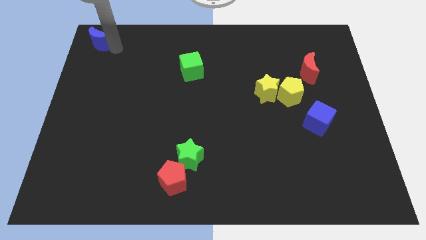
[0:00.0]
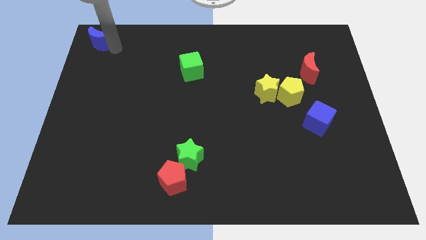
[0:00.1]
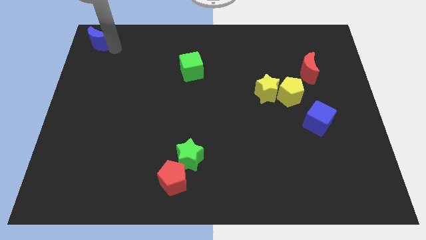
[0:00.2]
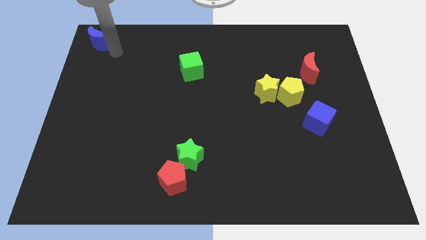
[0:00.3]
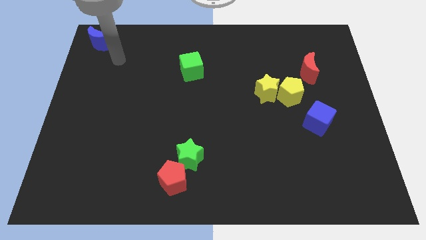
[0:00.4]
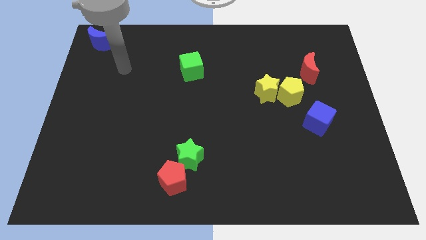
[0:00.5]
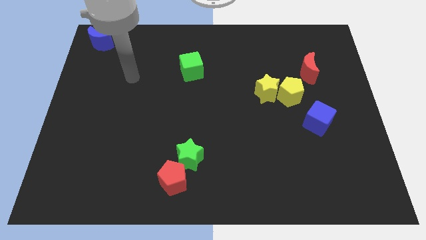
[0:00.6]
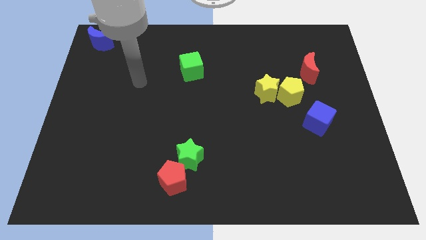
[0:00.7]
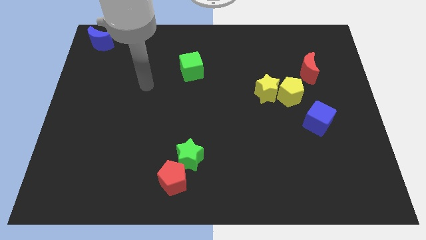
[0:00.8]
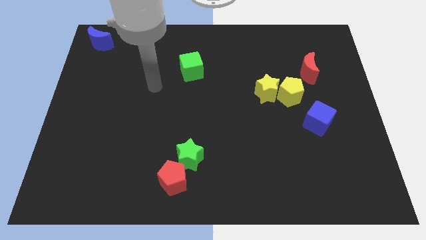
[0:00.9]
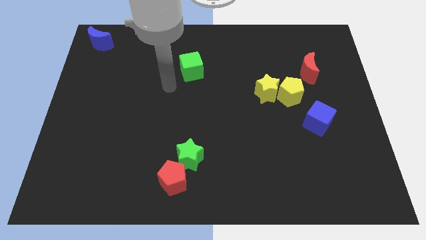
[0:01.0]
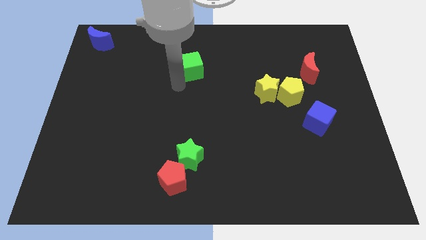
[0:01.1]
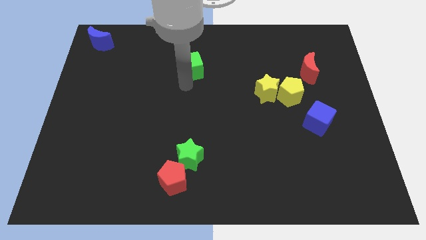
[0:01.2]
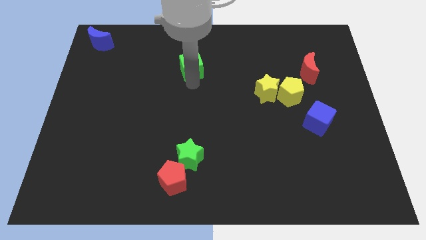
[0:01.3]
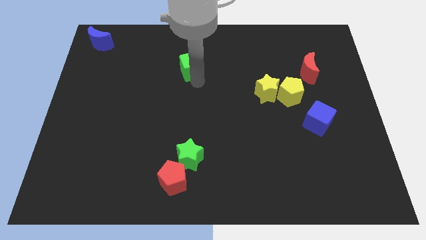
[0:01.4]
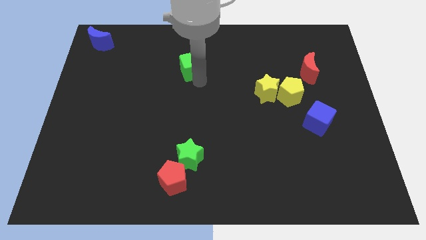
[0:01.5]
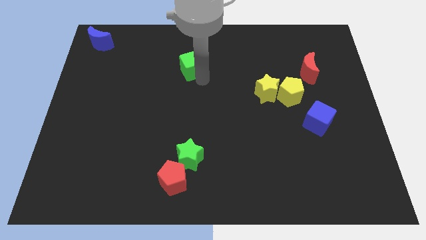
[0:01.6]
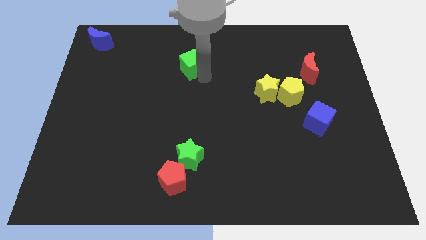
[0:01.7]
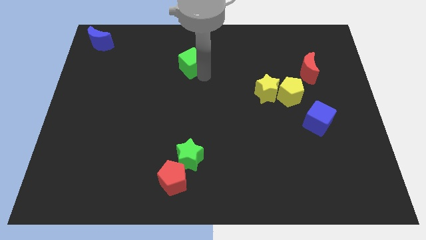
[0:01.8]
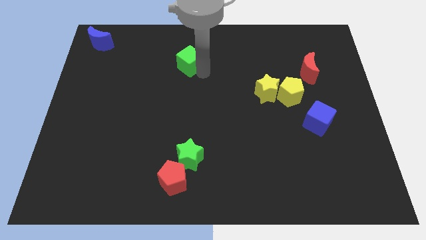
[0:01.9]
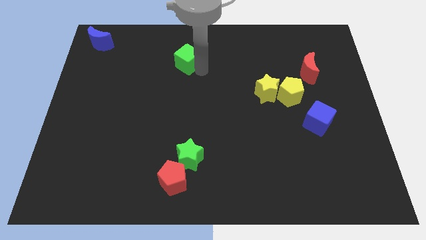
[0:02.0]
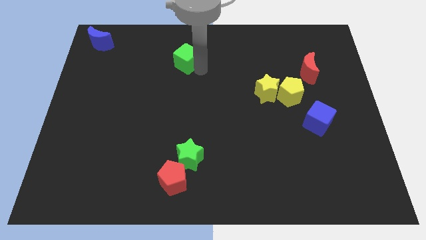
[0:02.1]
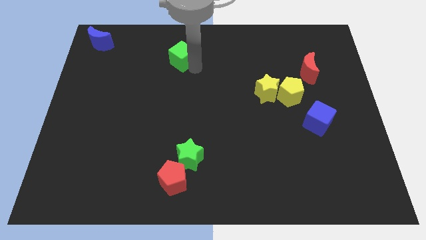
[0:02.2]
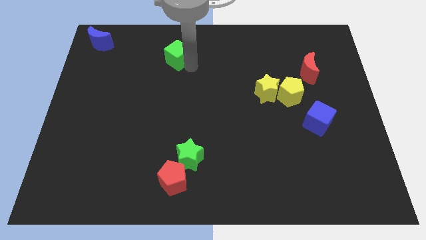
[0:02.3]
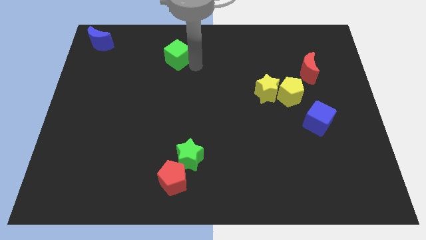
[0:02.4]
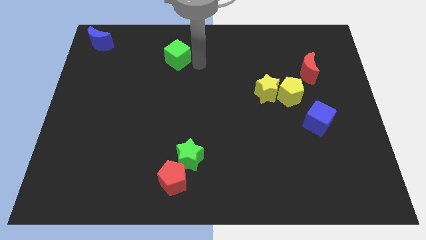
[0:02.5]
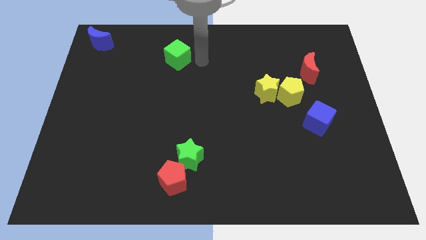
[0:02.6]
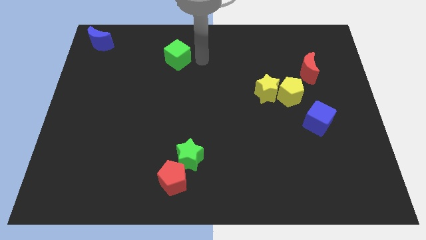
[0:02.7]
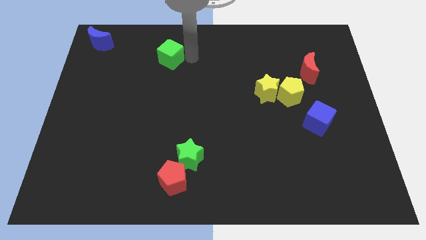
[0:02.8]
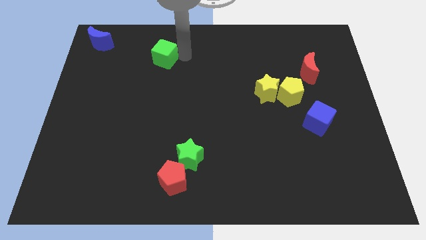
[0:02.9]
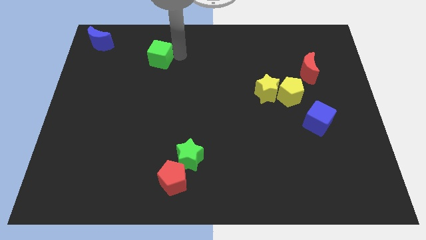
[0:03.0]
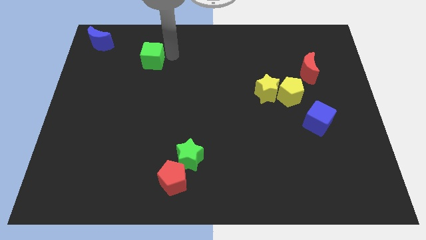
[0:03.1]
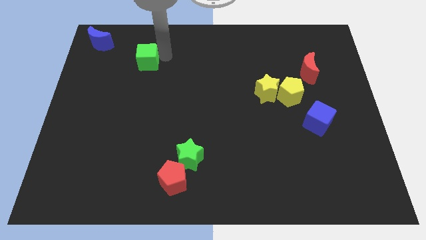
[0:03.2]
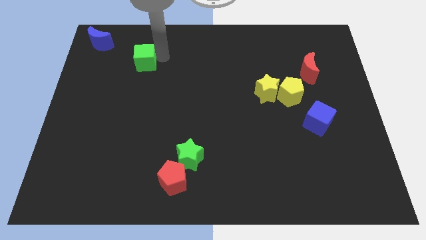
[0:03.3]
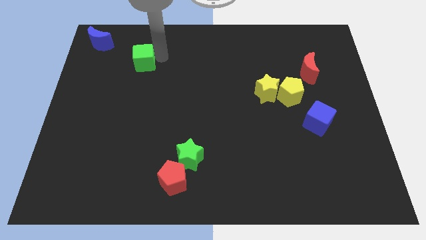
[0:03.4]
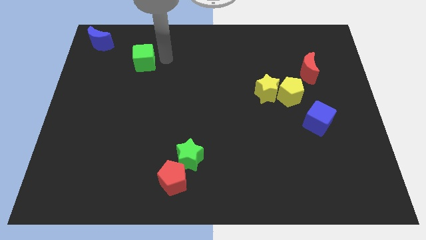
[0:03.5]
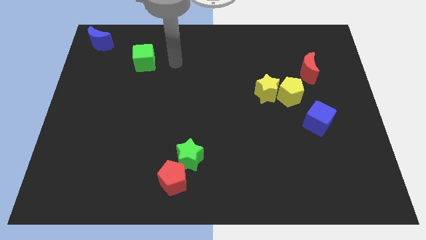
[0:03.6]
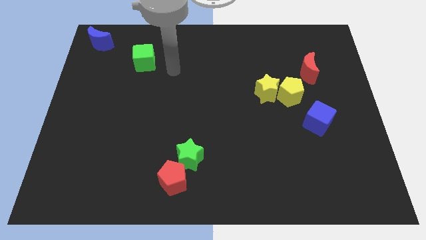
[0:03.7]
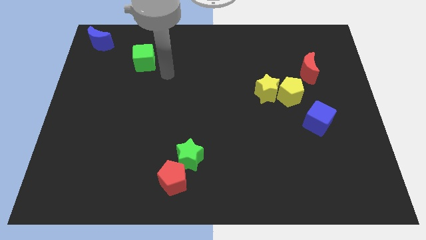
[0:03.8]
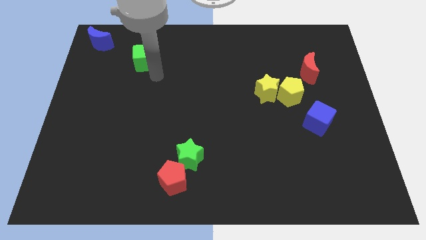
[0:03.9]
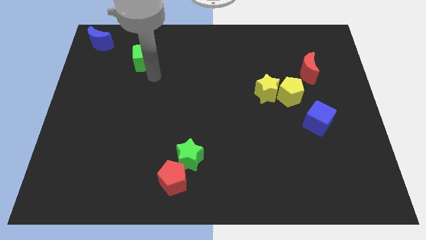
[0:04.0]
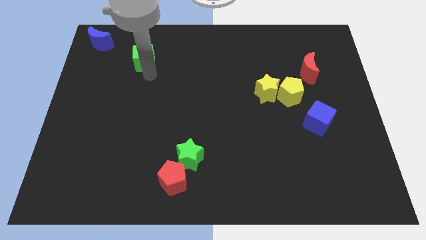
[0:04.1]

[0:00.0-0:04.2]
move green cube to the to the top left

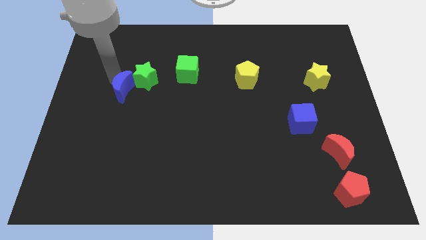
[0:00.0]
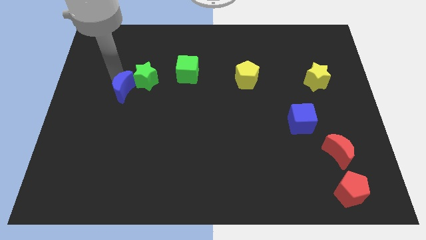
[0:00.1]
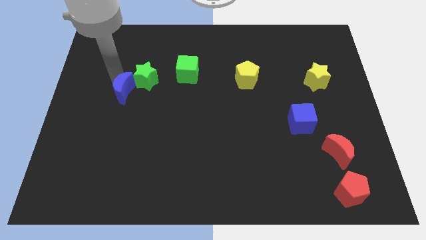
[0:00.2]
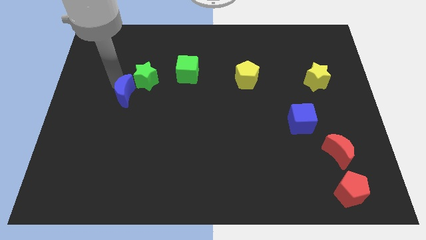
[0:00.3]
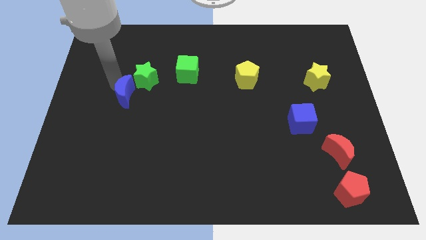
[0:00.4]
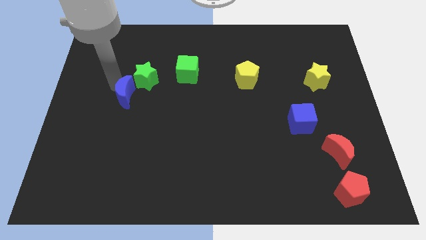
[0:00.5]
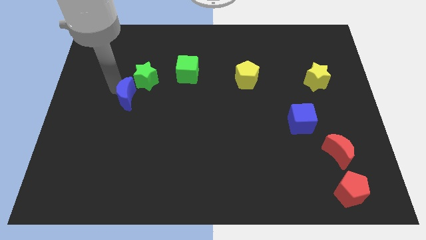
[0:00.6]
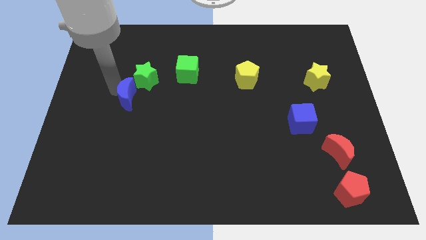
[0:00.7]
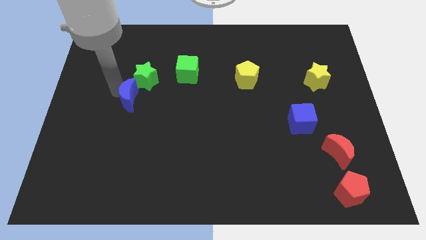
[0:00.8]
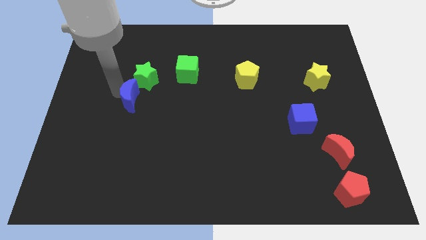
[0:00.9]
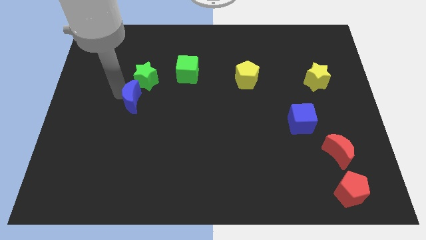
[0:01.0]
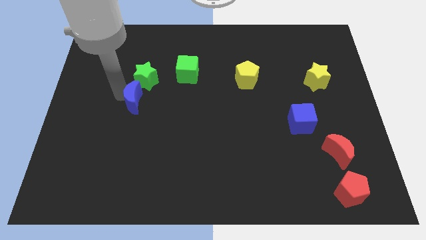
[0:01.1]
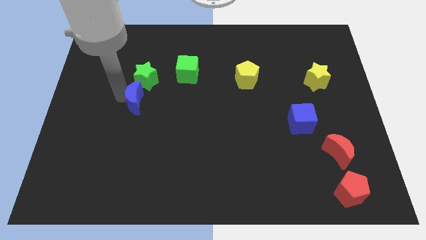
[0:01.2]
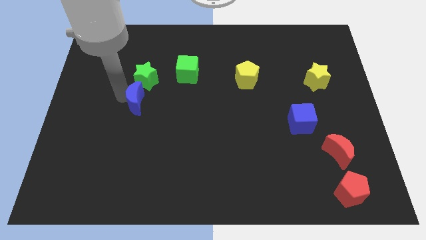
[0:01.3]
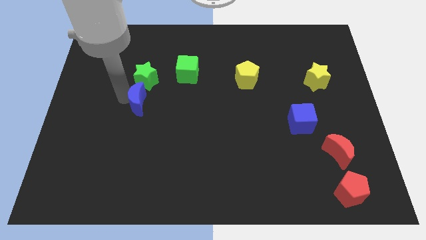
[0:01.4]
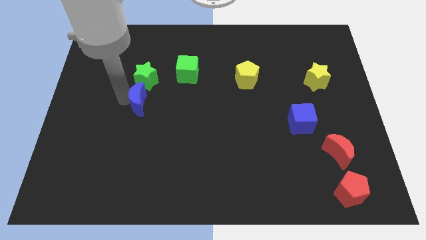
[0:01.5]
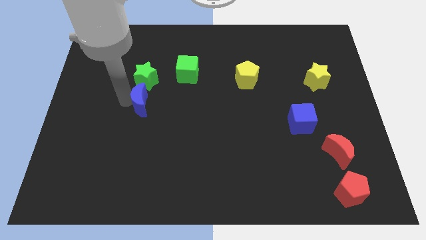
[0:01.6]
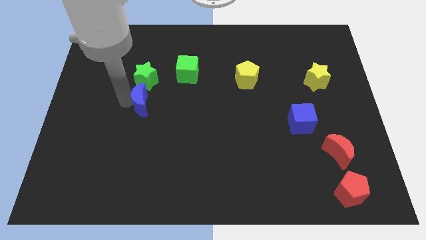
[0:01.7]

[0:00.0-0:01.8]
put the blue crescent at the bottom of the green star

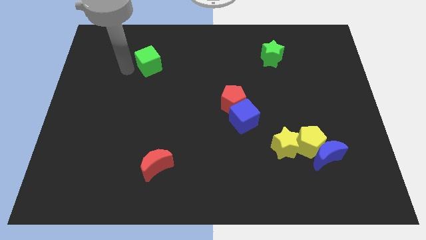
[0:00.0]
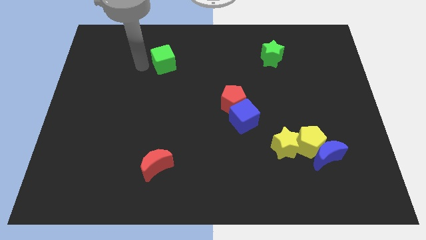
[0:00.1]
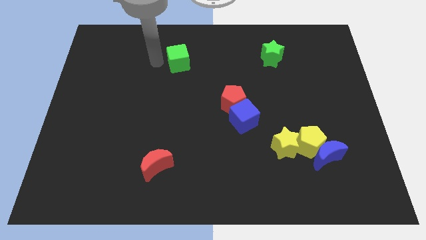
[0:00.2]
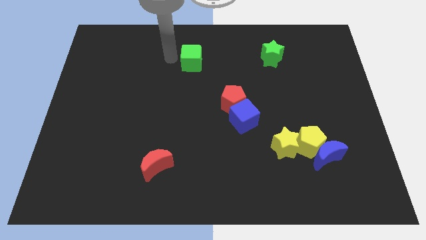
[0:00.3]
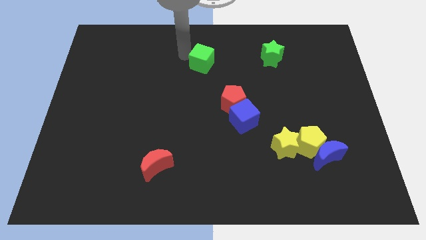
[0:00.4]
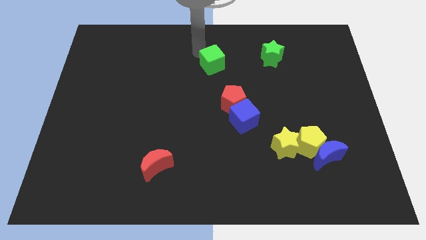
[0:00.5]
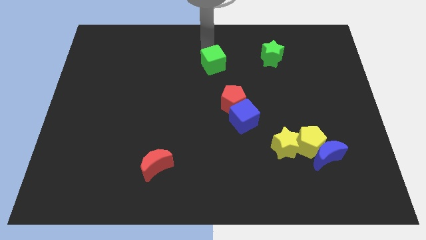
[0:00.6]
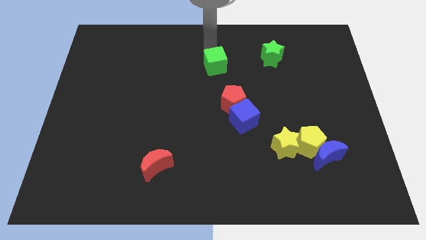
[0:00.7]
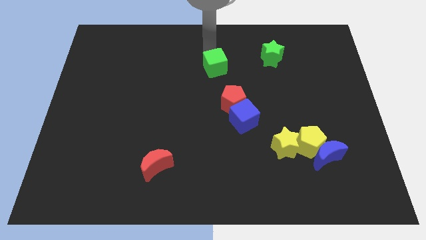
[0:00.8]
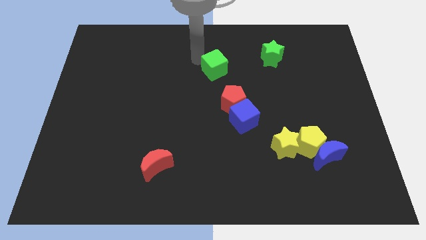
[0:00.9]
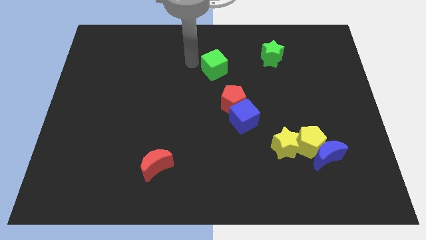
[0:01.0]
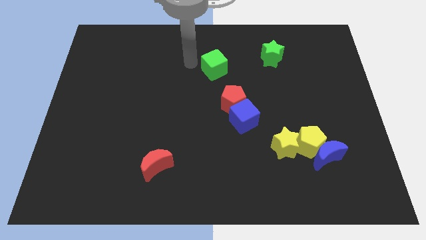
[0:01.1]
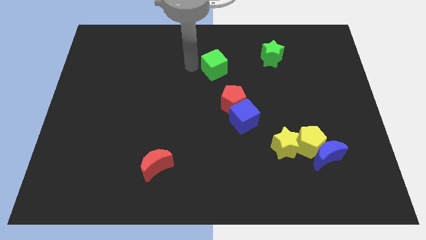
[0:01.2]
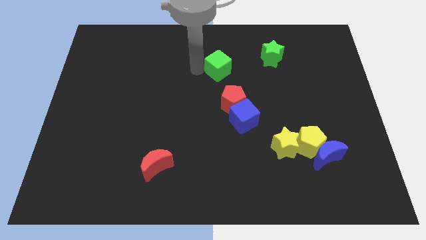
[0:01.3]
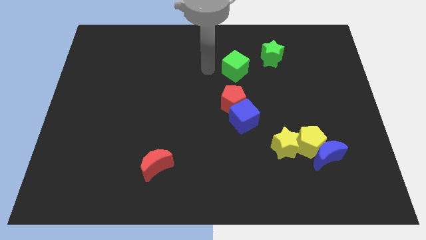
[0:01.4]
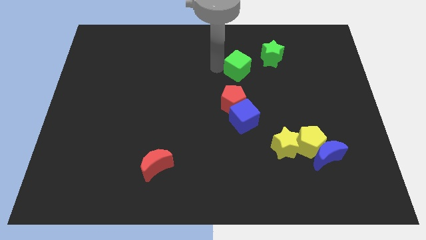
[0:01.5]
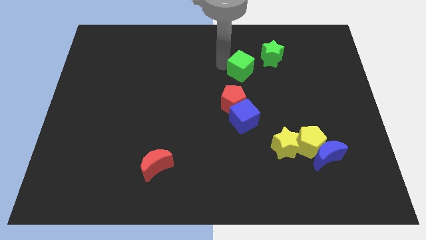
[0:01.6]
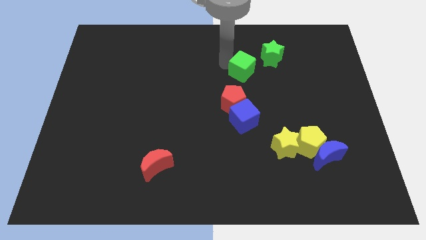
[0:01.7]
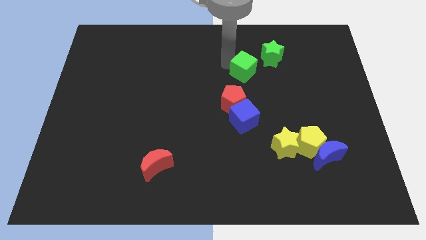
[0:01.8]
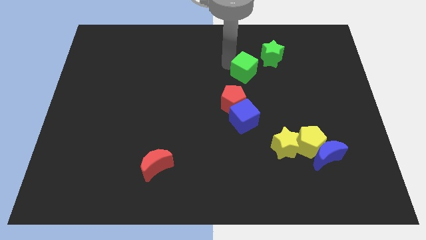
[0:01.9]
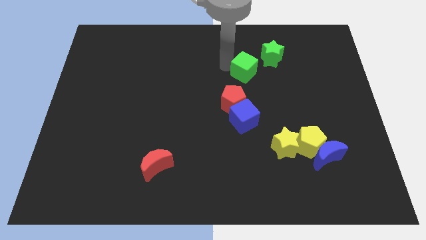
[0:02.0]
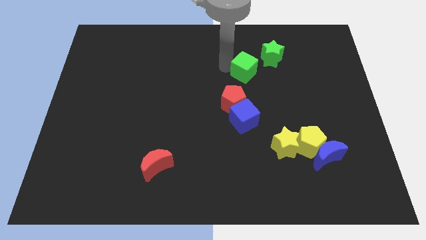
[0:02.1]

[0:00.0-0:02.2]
move the green cube in between green star and red pentagon

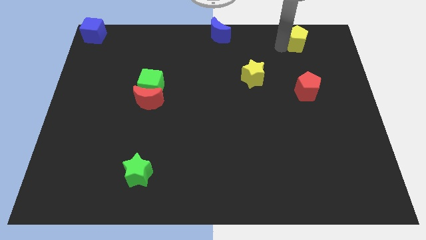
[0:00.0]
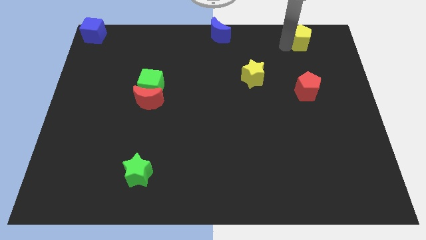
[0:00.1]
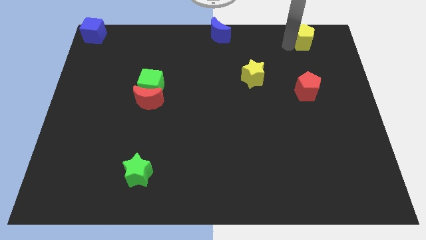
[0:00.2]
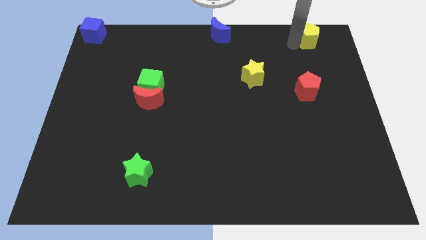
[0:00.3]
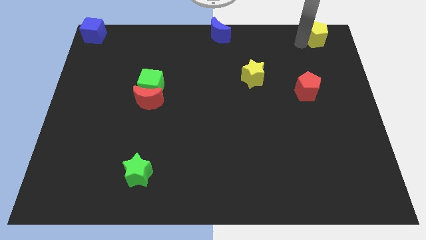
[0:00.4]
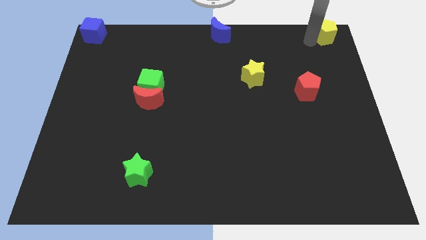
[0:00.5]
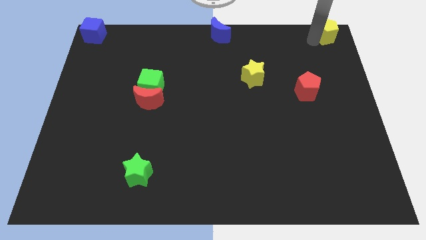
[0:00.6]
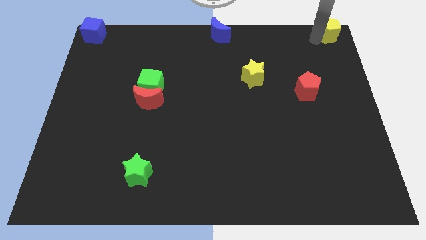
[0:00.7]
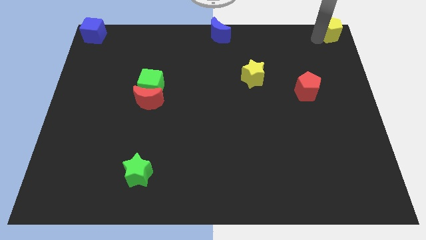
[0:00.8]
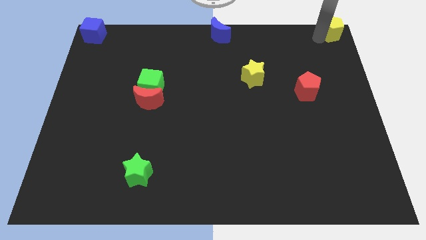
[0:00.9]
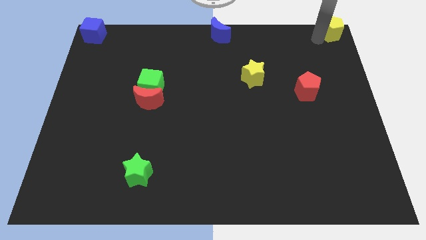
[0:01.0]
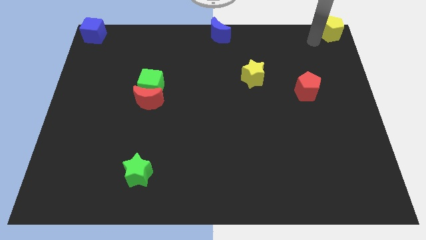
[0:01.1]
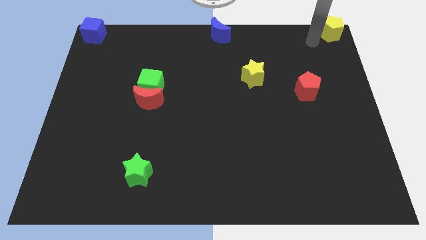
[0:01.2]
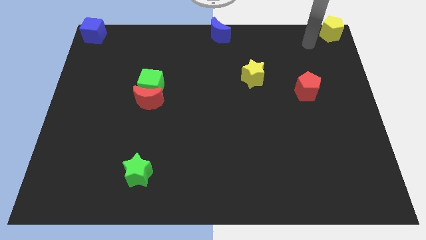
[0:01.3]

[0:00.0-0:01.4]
push the yellow pentagon to the top right corner of the board
